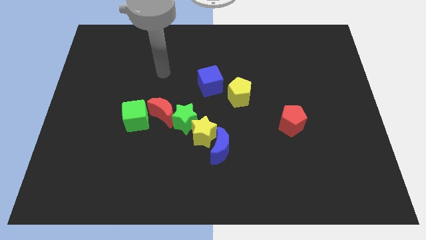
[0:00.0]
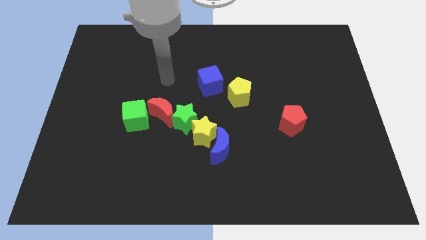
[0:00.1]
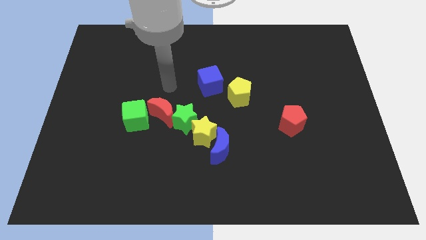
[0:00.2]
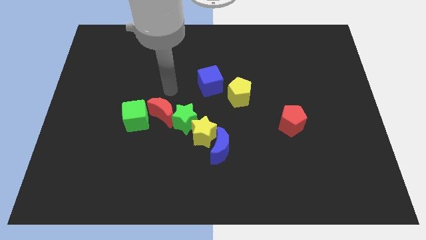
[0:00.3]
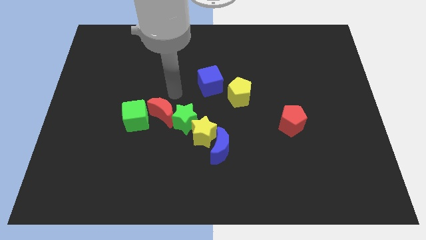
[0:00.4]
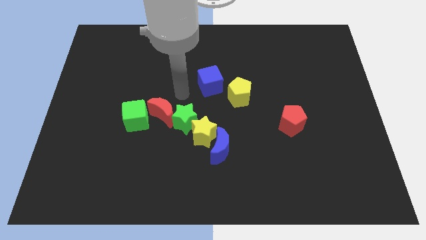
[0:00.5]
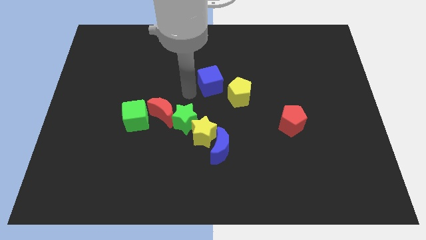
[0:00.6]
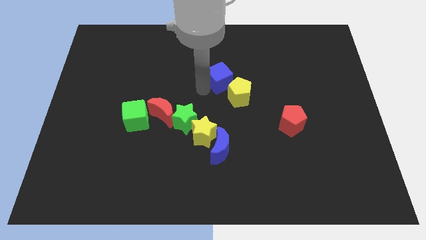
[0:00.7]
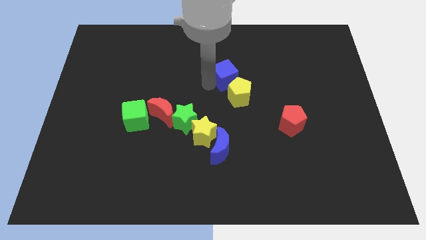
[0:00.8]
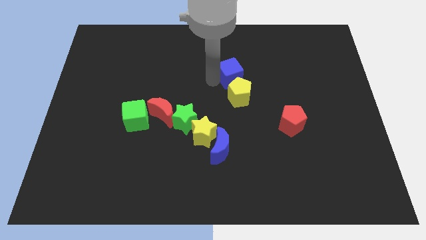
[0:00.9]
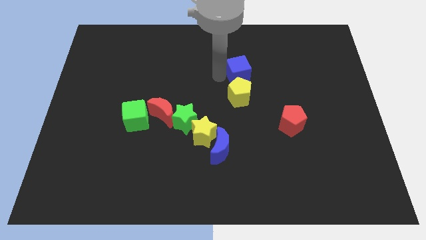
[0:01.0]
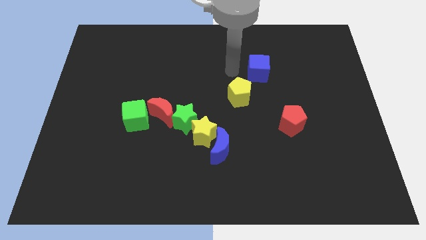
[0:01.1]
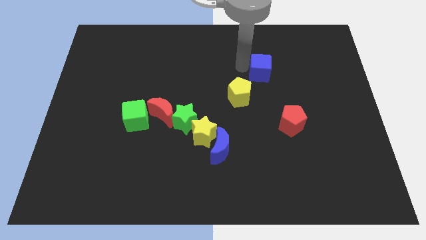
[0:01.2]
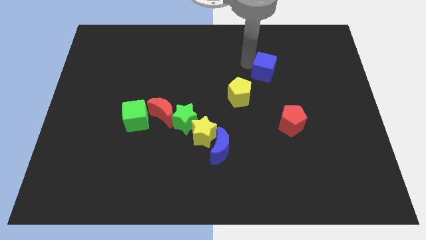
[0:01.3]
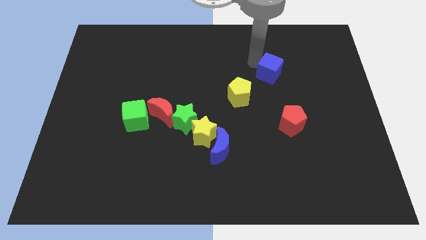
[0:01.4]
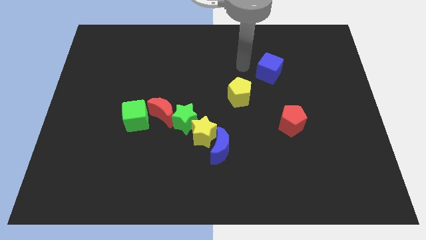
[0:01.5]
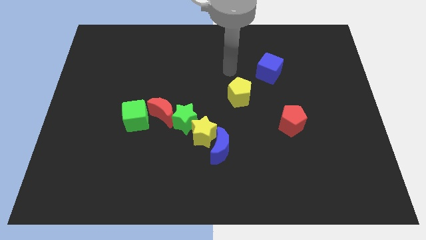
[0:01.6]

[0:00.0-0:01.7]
push the blue cube towards the right side of the board

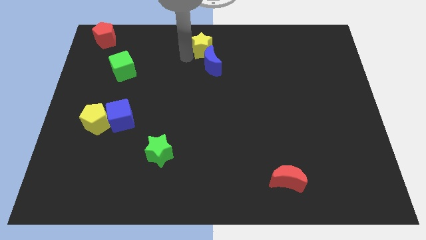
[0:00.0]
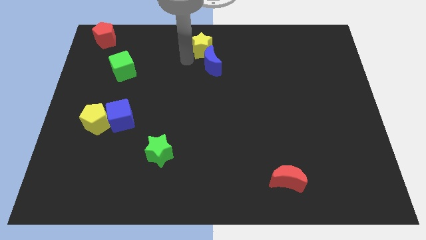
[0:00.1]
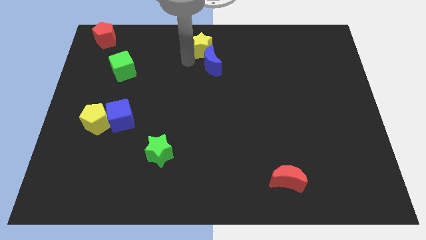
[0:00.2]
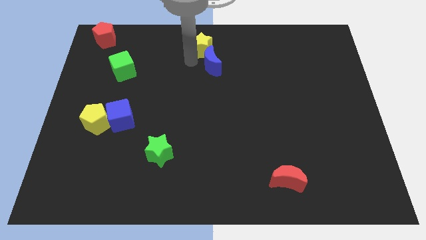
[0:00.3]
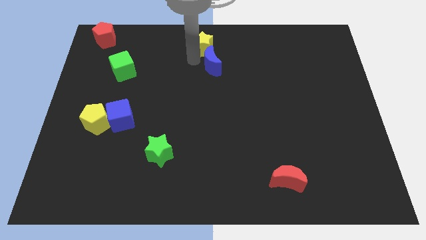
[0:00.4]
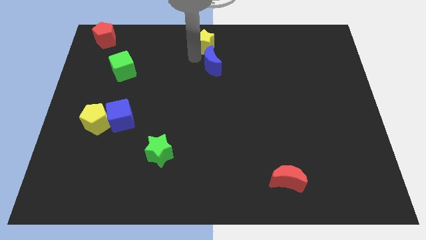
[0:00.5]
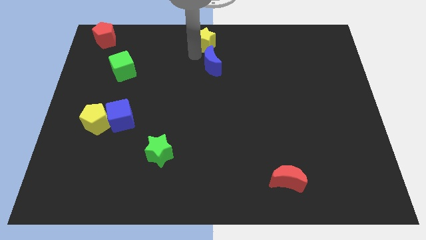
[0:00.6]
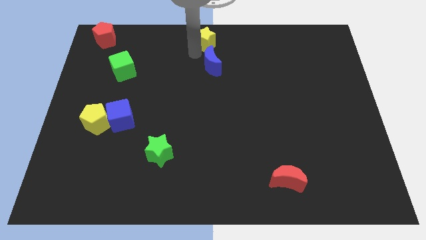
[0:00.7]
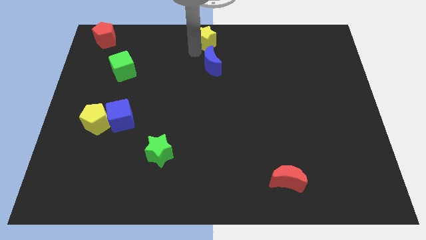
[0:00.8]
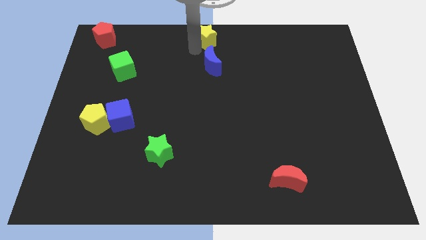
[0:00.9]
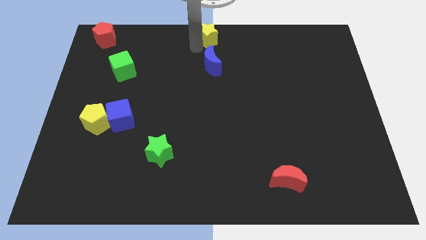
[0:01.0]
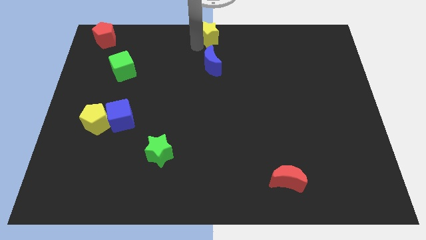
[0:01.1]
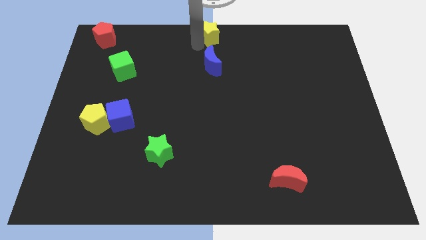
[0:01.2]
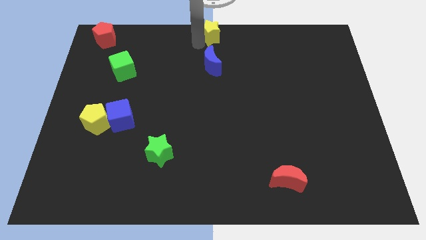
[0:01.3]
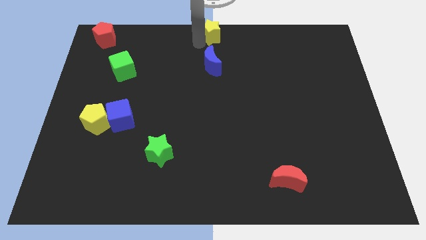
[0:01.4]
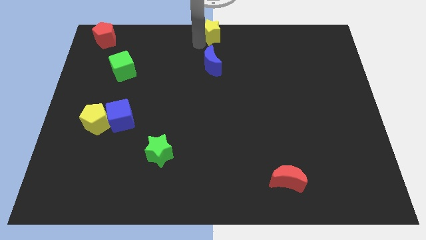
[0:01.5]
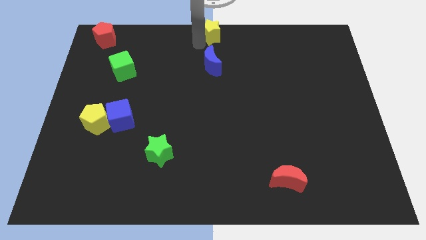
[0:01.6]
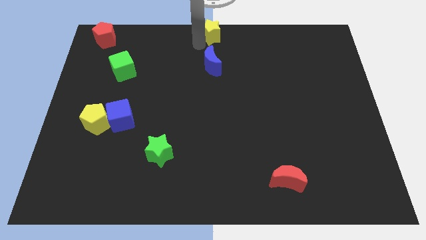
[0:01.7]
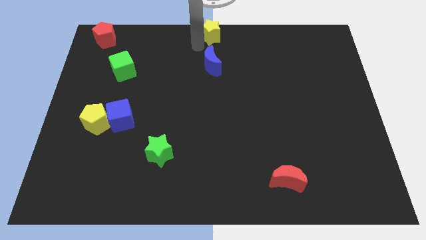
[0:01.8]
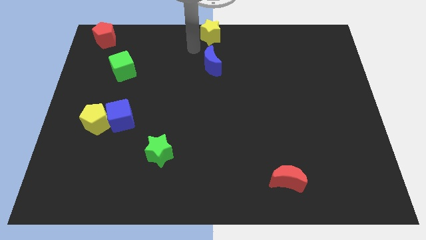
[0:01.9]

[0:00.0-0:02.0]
place the yellow star to the top center of the board

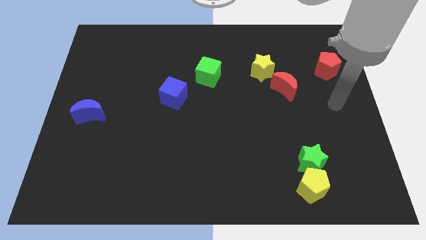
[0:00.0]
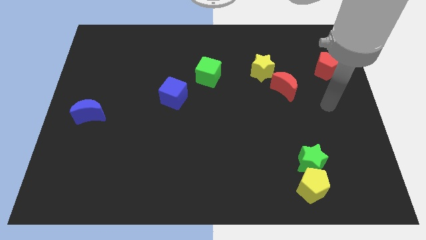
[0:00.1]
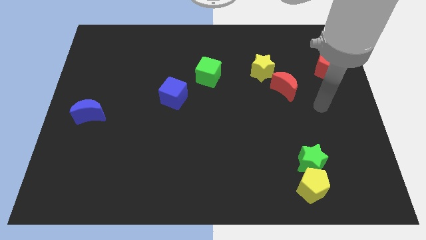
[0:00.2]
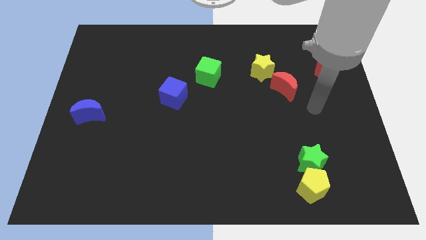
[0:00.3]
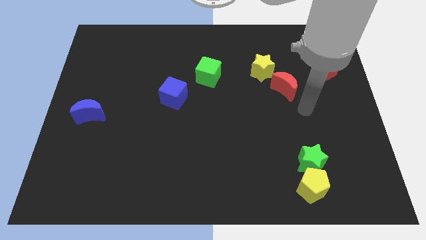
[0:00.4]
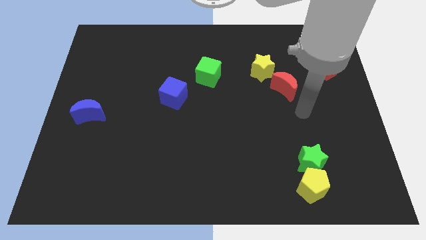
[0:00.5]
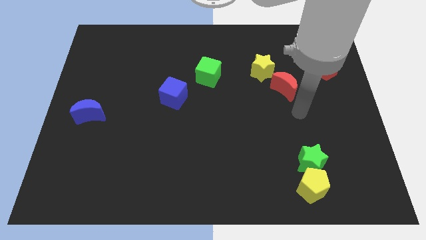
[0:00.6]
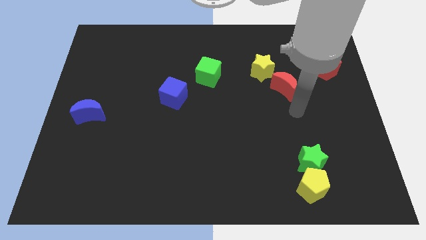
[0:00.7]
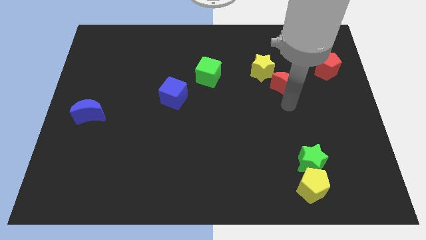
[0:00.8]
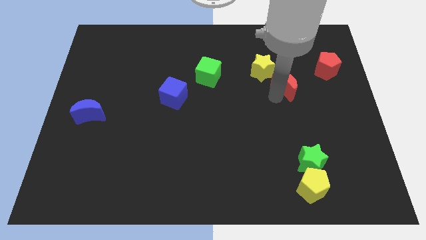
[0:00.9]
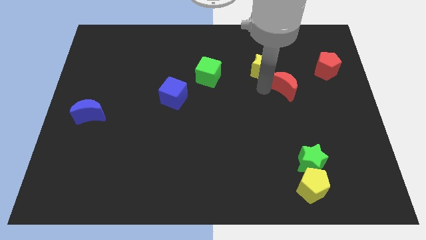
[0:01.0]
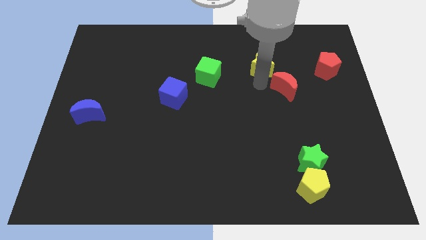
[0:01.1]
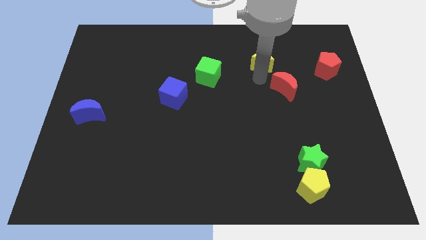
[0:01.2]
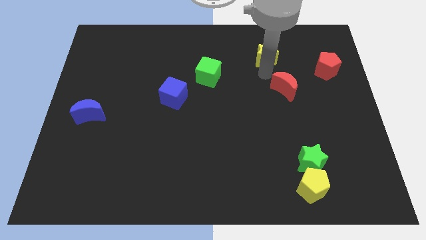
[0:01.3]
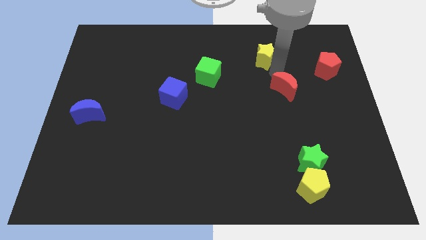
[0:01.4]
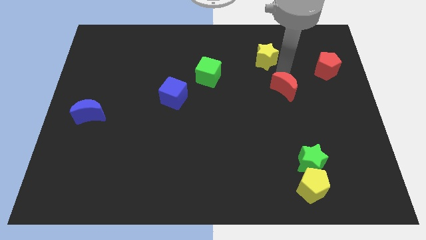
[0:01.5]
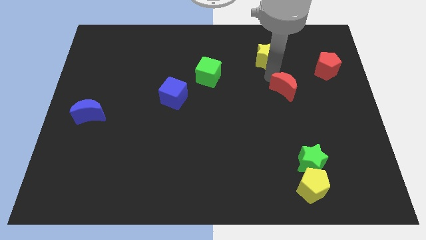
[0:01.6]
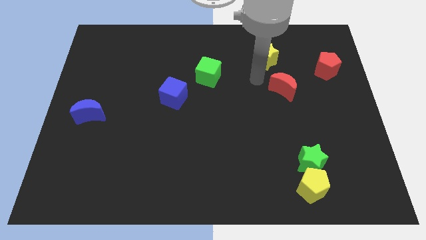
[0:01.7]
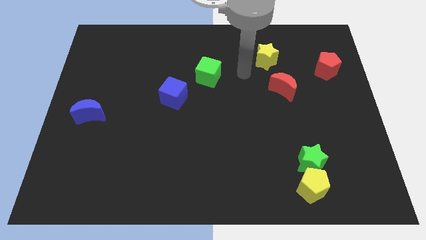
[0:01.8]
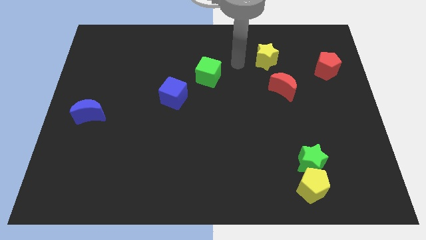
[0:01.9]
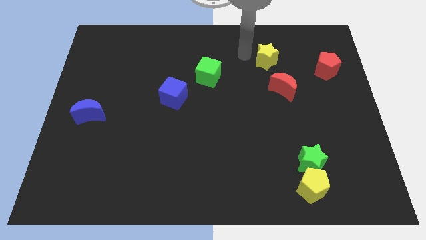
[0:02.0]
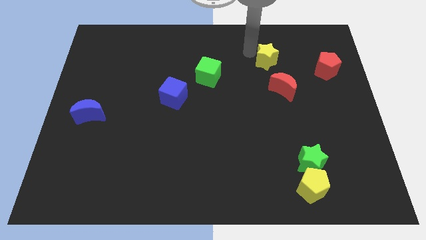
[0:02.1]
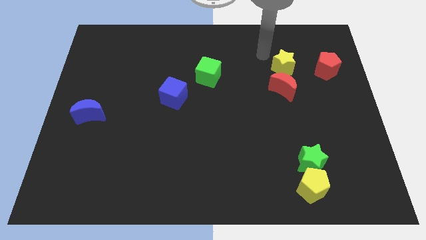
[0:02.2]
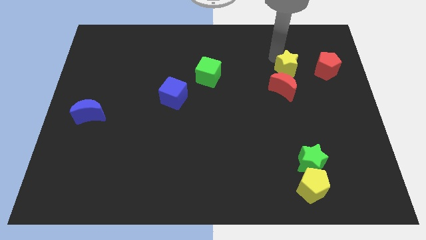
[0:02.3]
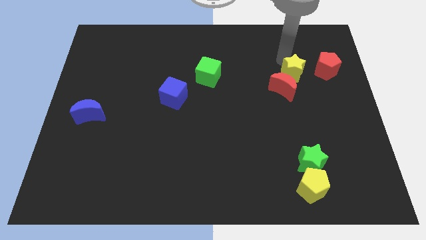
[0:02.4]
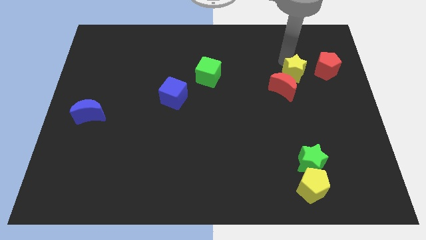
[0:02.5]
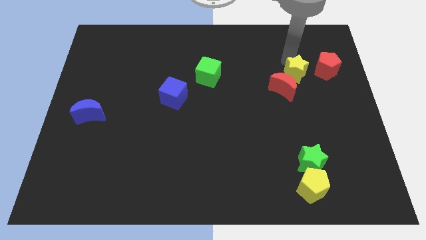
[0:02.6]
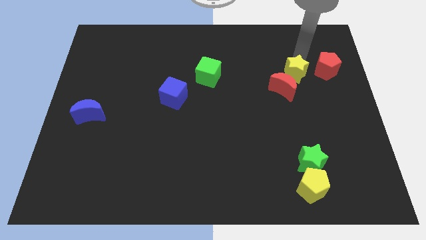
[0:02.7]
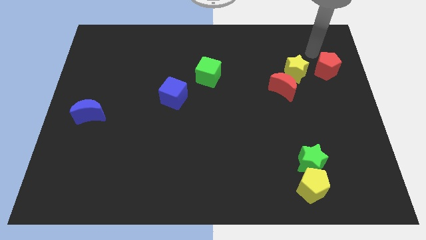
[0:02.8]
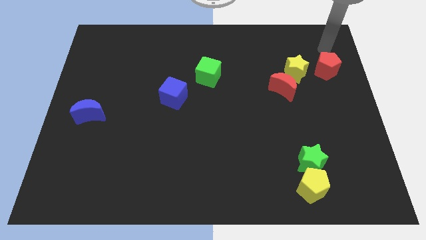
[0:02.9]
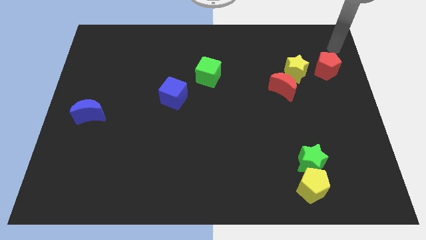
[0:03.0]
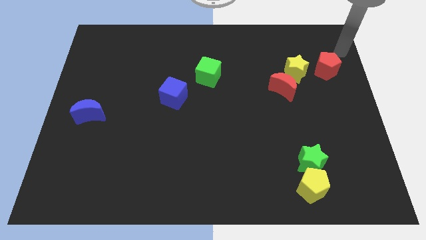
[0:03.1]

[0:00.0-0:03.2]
move the yellow star to the top right of the red moon

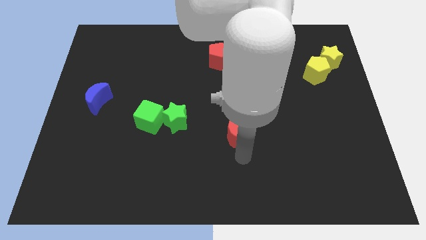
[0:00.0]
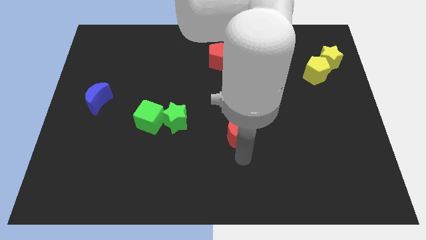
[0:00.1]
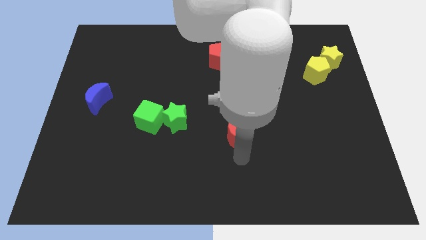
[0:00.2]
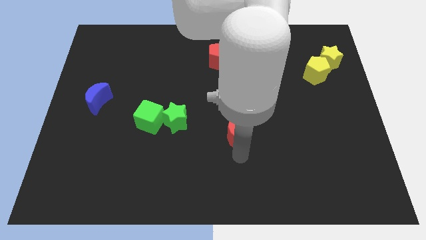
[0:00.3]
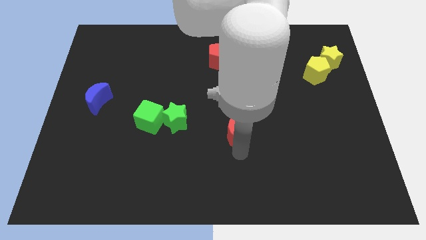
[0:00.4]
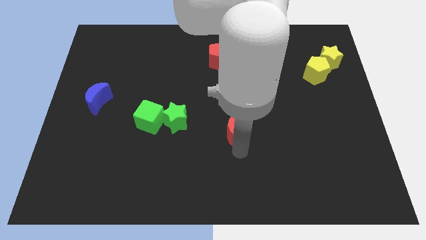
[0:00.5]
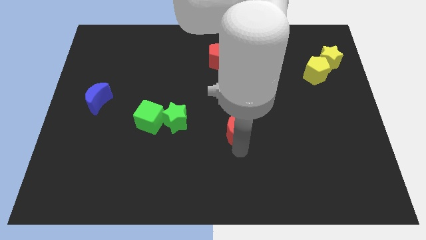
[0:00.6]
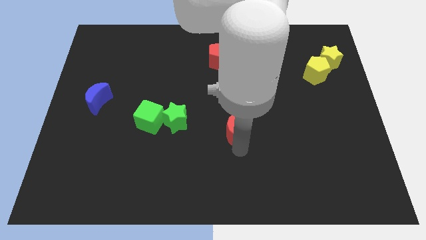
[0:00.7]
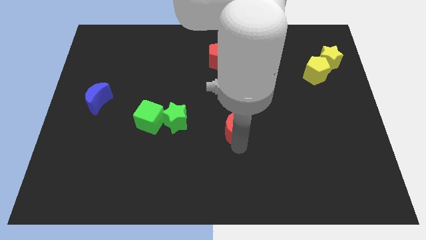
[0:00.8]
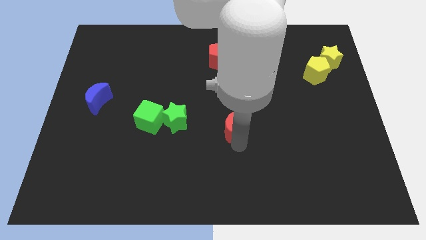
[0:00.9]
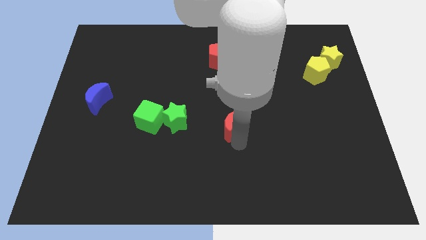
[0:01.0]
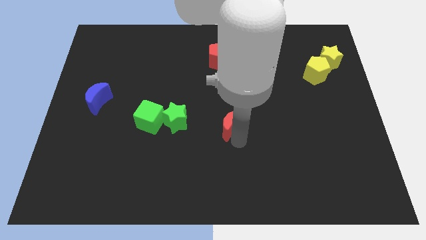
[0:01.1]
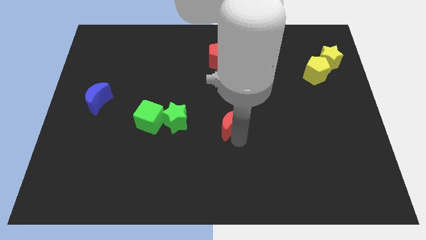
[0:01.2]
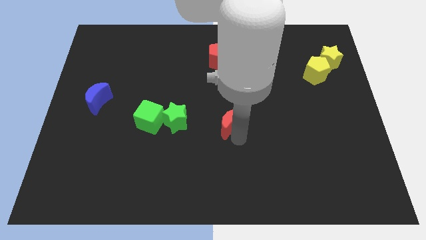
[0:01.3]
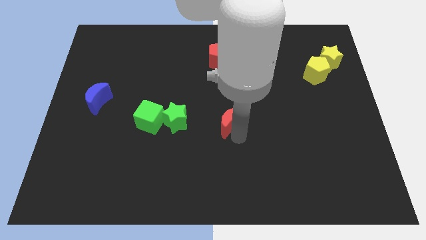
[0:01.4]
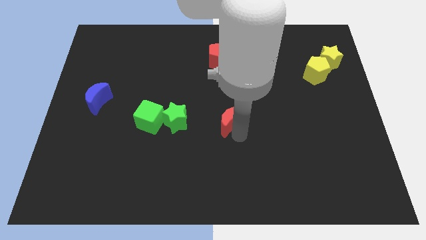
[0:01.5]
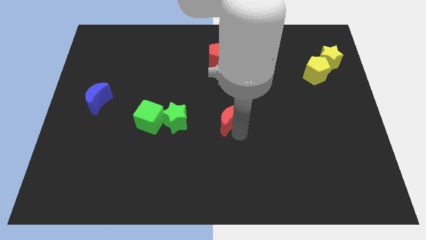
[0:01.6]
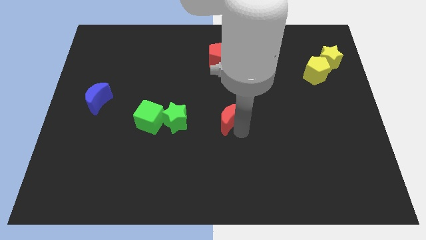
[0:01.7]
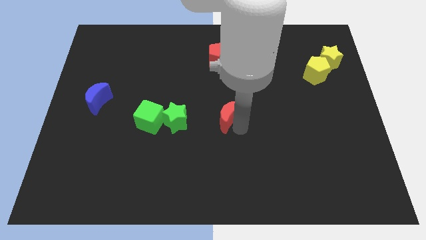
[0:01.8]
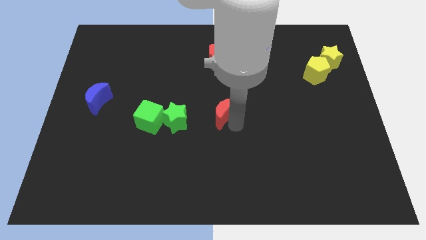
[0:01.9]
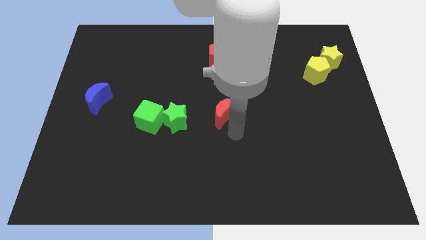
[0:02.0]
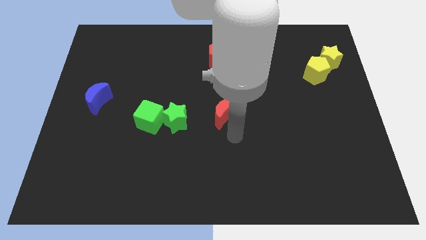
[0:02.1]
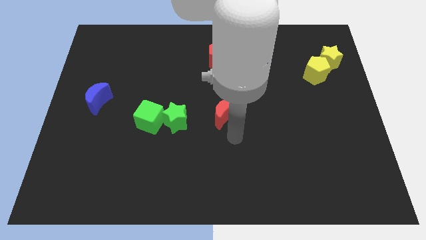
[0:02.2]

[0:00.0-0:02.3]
place the red crescent to the right side of green star
